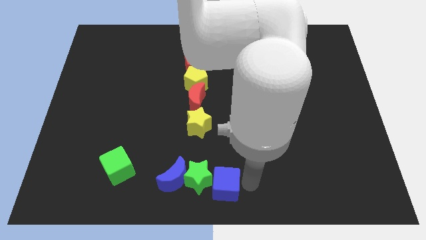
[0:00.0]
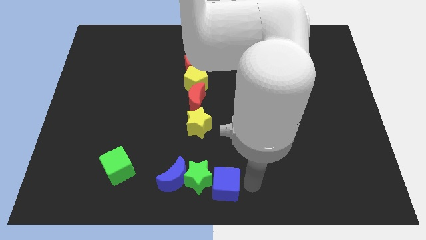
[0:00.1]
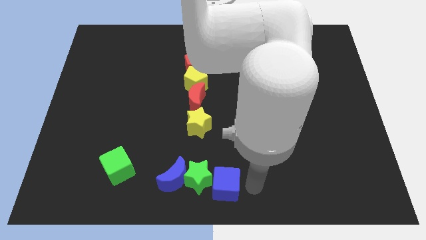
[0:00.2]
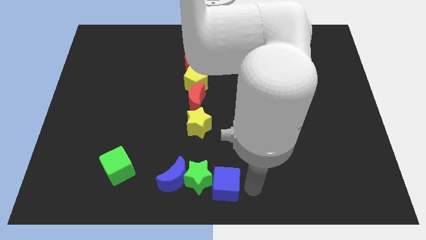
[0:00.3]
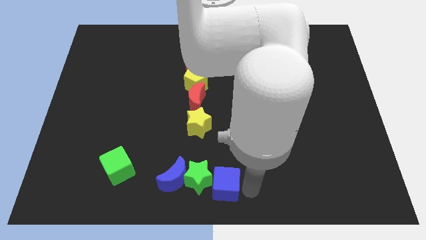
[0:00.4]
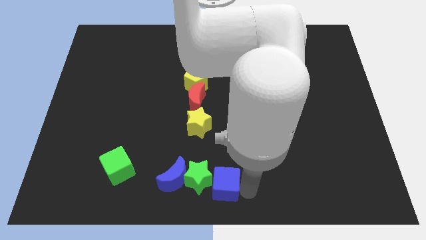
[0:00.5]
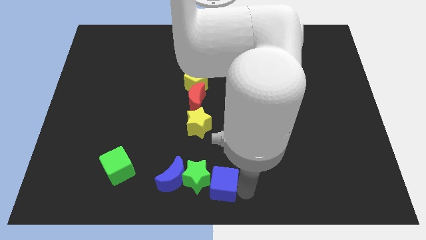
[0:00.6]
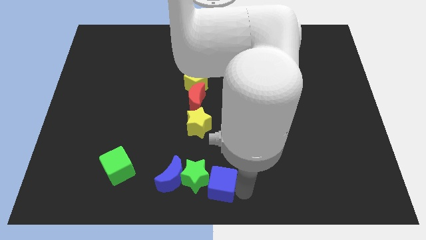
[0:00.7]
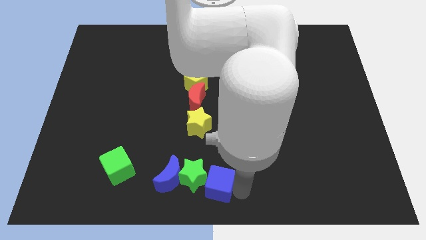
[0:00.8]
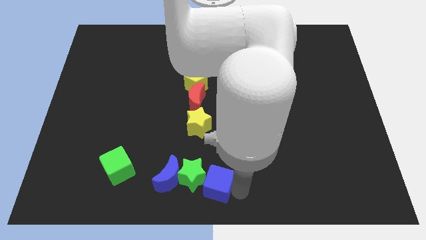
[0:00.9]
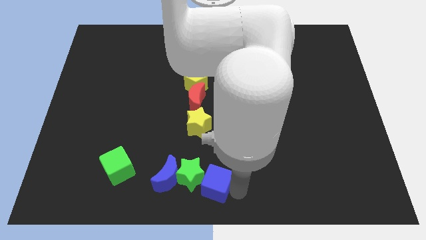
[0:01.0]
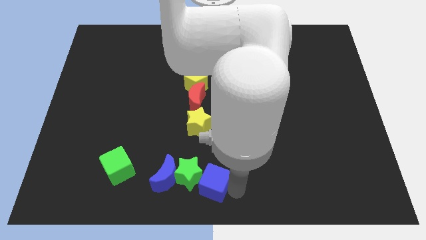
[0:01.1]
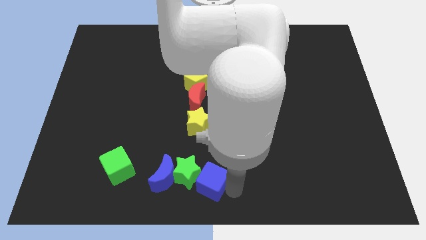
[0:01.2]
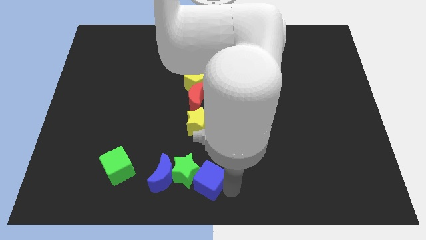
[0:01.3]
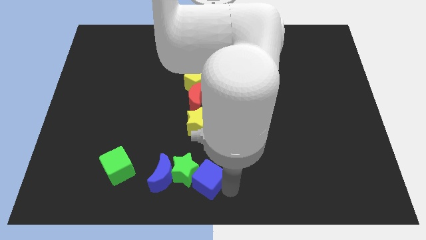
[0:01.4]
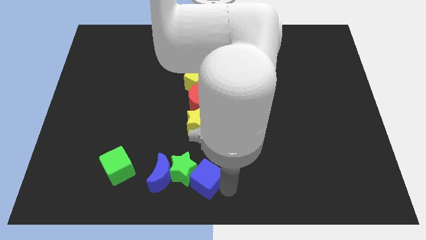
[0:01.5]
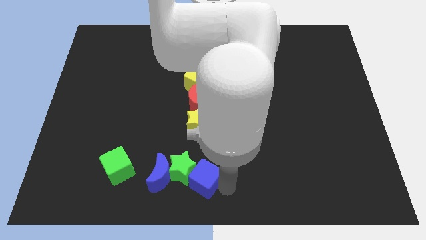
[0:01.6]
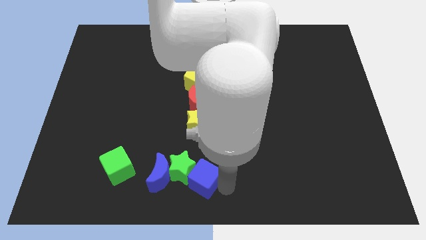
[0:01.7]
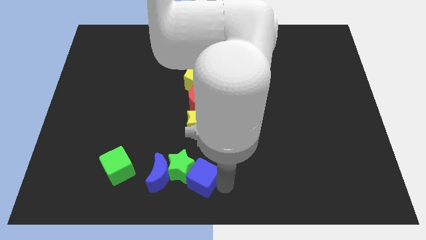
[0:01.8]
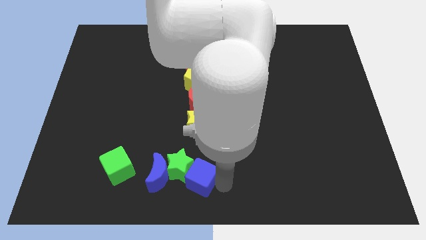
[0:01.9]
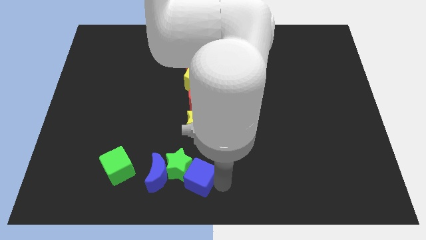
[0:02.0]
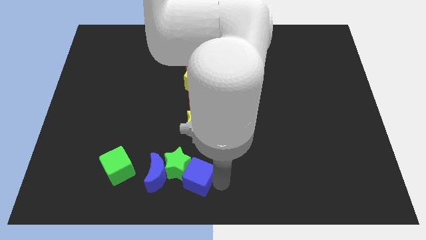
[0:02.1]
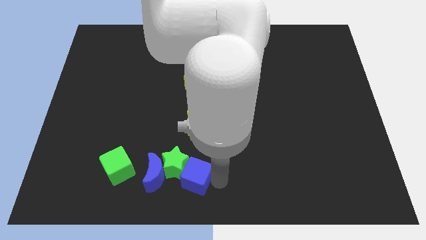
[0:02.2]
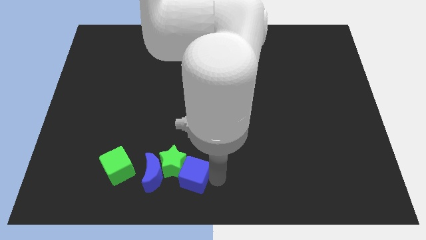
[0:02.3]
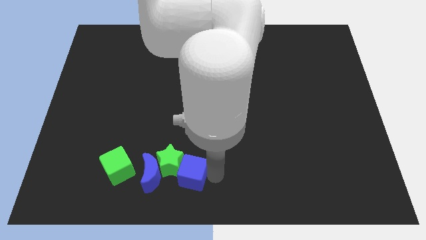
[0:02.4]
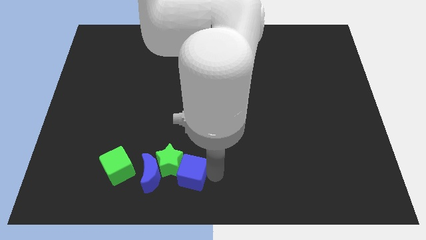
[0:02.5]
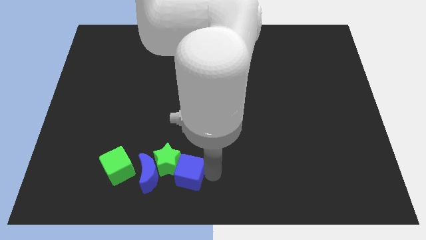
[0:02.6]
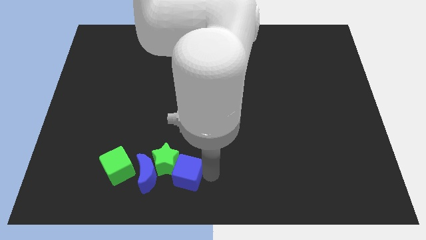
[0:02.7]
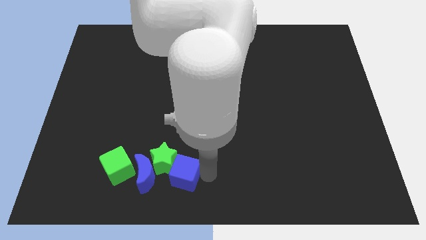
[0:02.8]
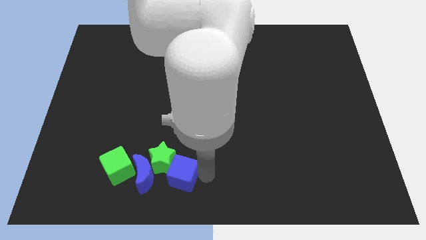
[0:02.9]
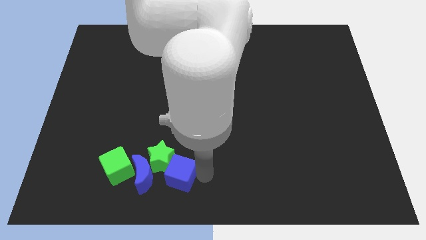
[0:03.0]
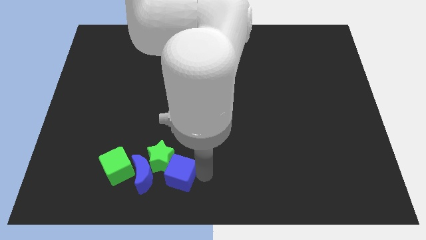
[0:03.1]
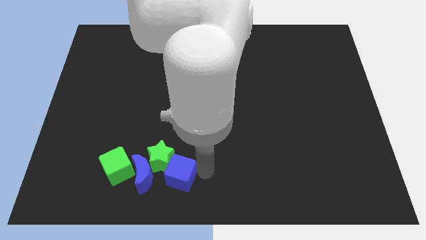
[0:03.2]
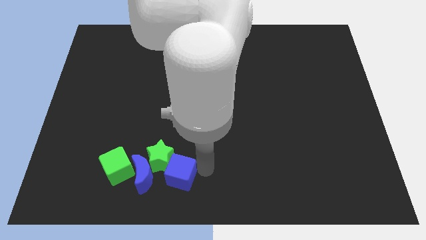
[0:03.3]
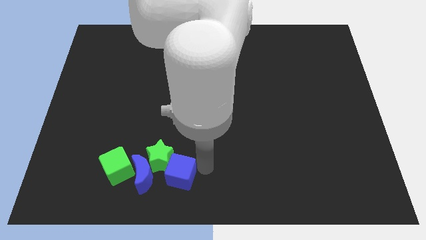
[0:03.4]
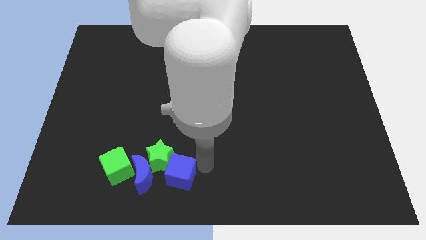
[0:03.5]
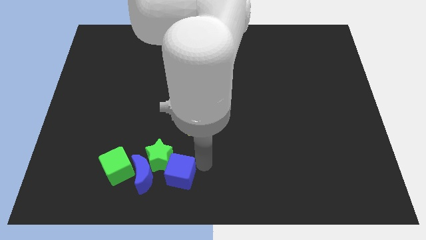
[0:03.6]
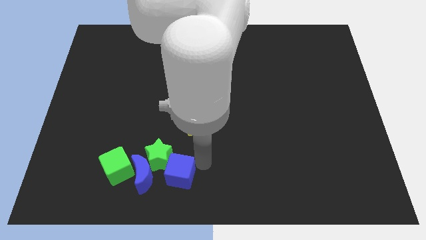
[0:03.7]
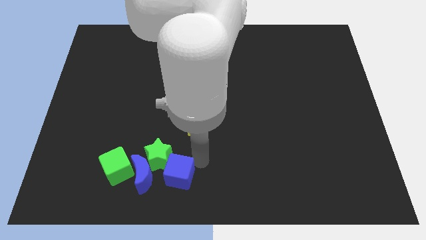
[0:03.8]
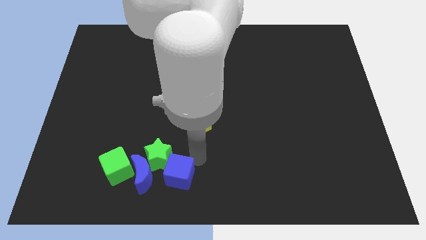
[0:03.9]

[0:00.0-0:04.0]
move the blue cube to form a row towards the green star

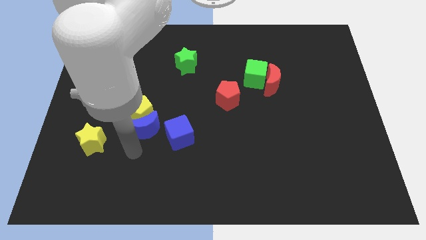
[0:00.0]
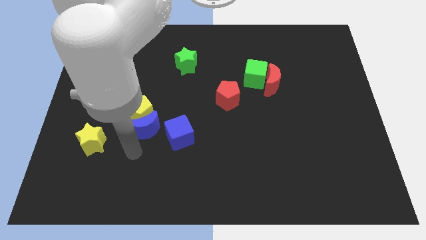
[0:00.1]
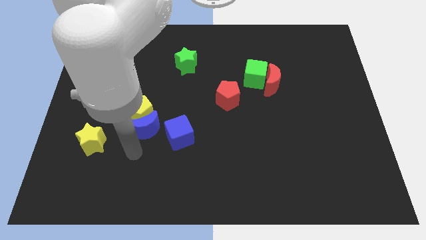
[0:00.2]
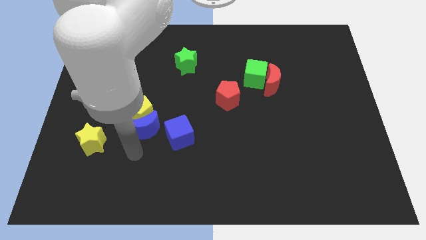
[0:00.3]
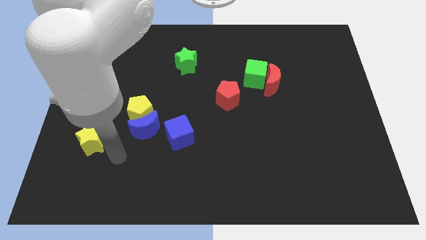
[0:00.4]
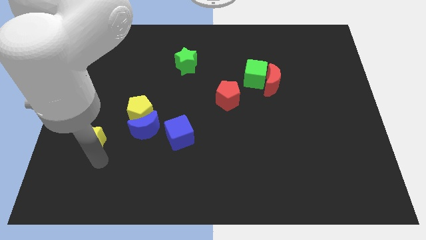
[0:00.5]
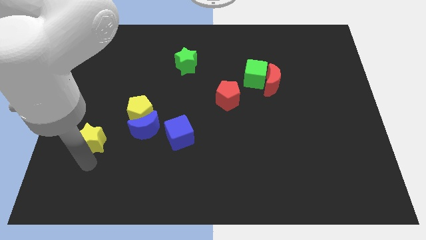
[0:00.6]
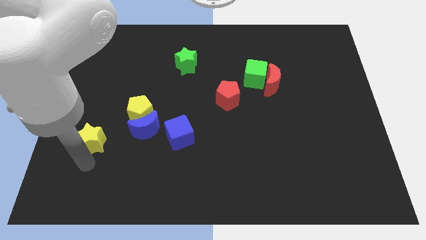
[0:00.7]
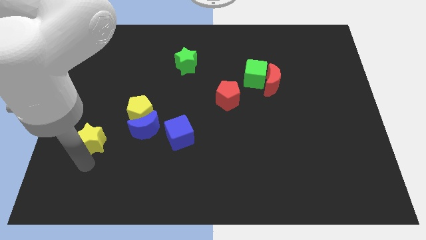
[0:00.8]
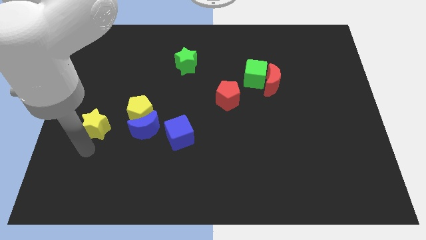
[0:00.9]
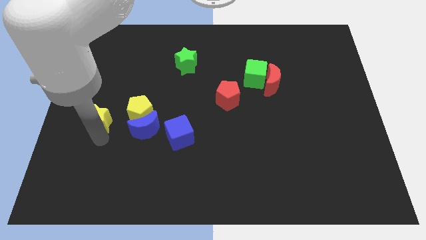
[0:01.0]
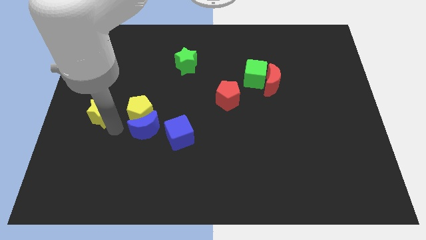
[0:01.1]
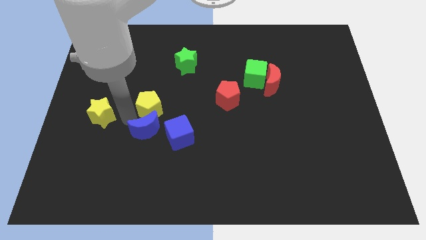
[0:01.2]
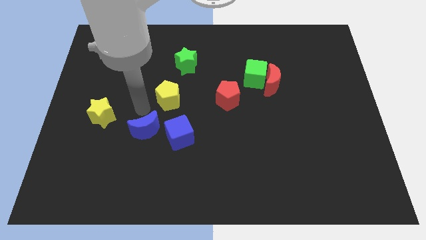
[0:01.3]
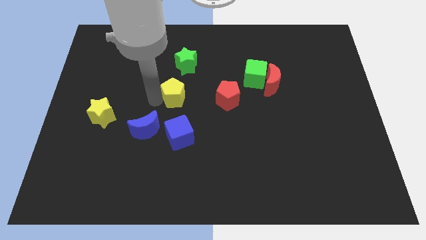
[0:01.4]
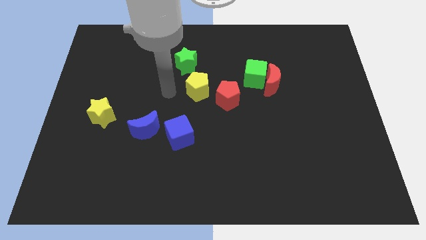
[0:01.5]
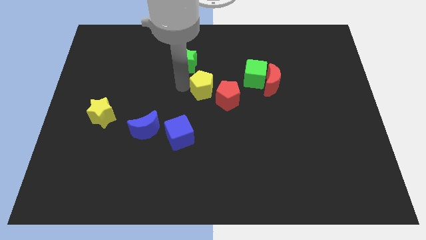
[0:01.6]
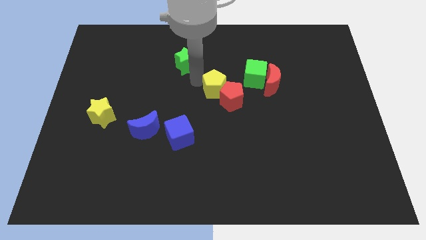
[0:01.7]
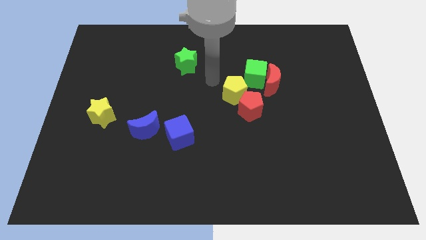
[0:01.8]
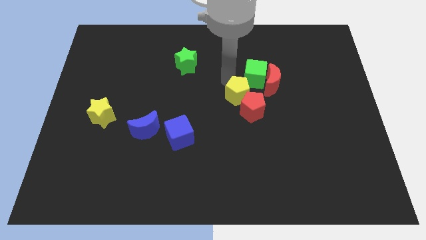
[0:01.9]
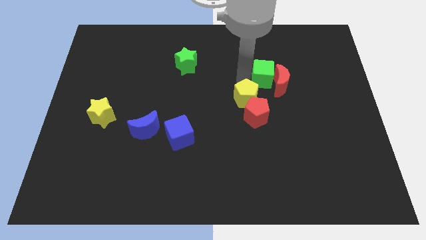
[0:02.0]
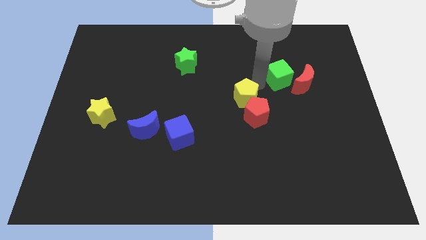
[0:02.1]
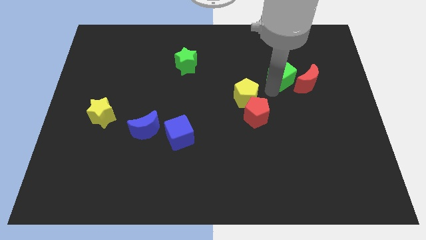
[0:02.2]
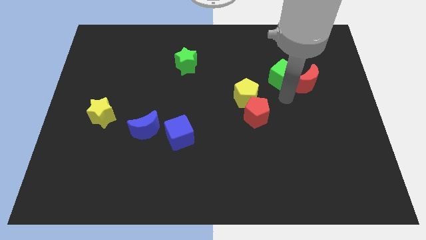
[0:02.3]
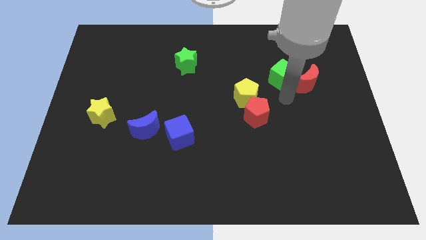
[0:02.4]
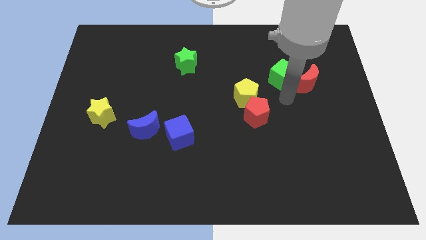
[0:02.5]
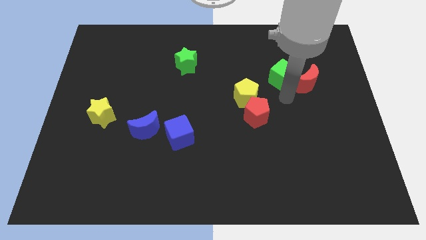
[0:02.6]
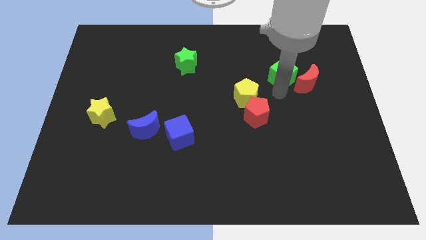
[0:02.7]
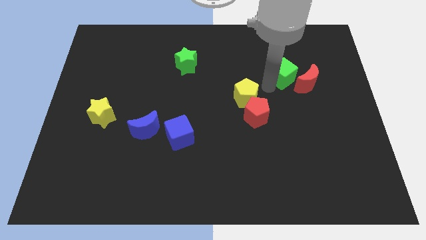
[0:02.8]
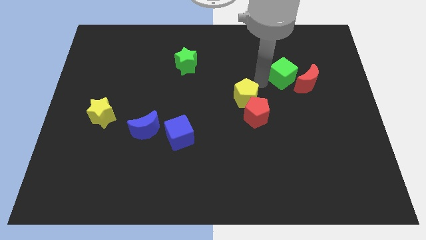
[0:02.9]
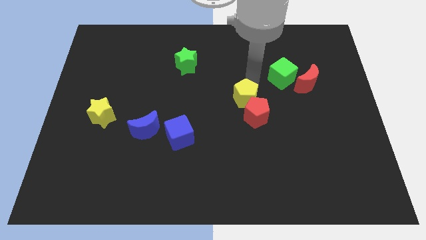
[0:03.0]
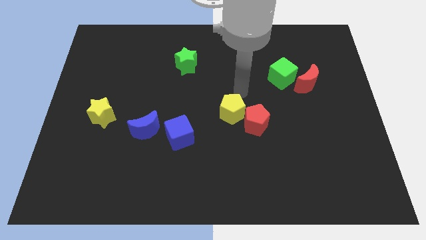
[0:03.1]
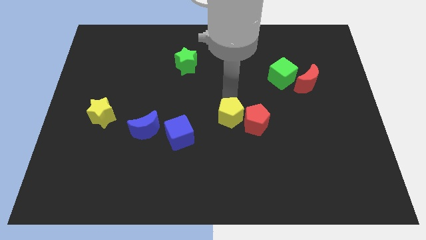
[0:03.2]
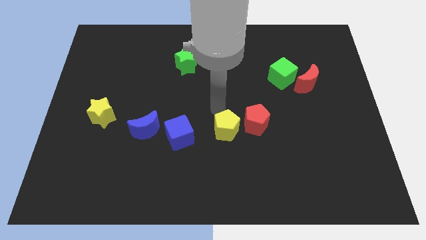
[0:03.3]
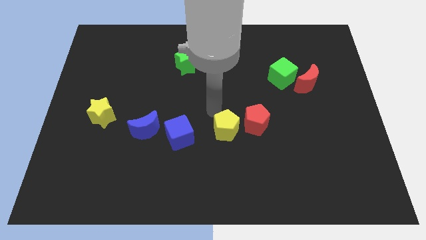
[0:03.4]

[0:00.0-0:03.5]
separate the yellow pentagon from blue cube

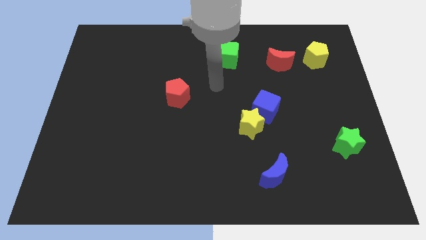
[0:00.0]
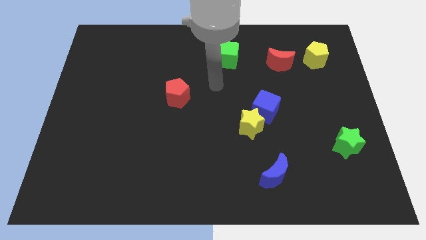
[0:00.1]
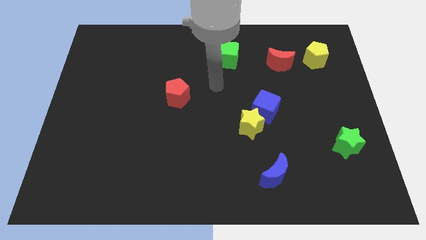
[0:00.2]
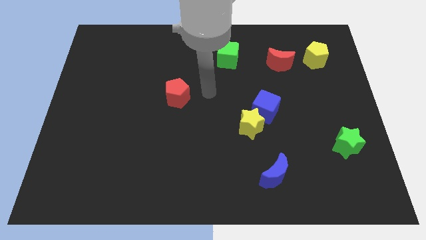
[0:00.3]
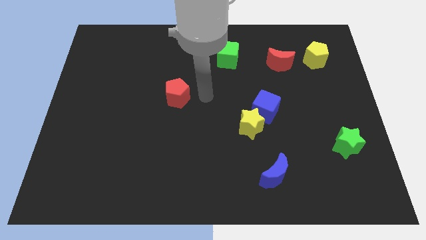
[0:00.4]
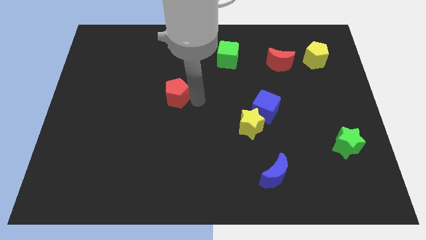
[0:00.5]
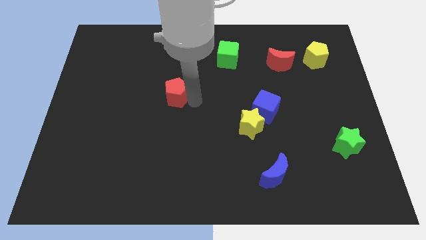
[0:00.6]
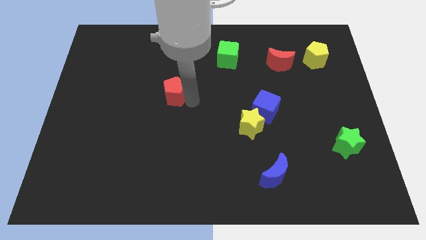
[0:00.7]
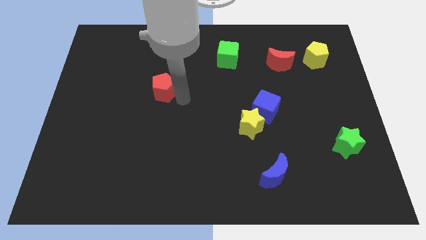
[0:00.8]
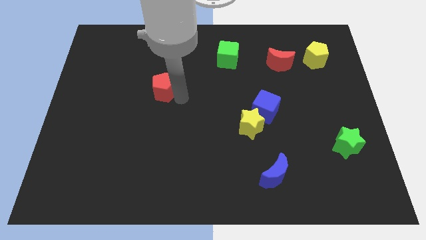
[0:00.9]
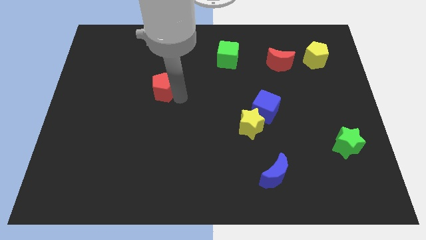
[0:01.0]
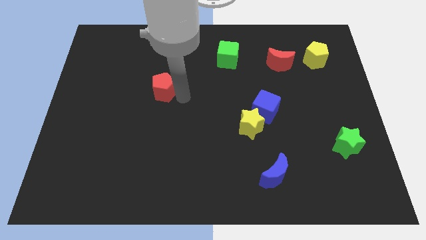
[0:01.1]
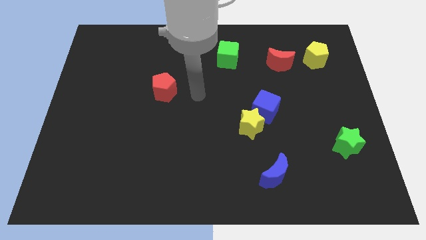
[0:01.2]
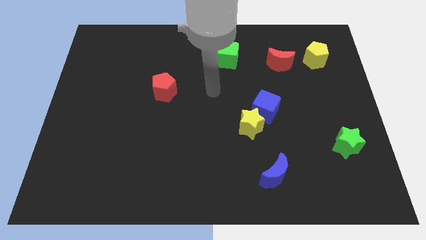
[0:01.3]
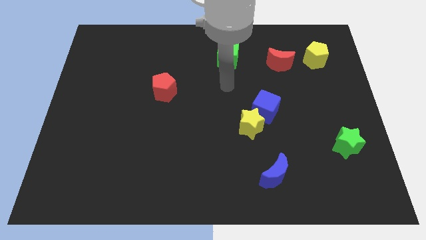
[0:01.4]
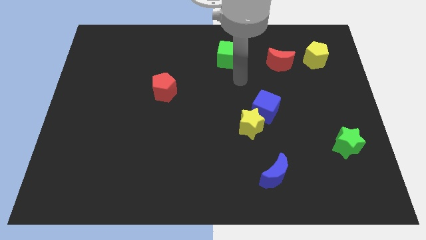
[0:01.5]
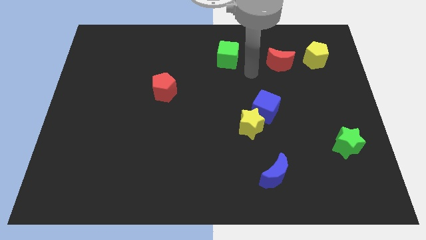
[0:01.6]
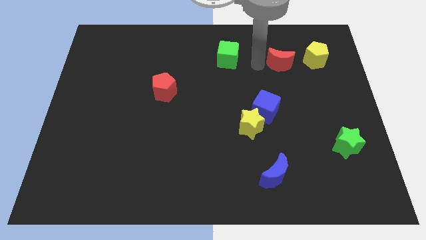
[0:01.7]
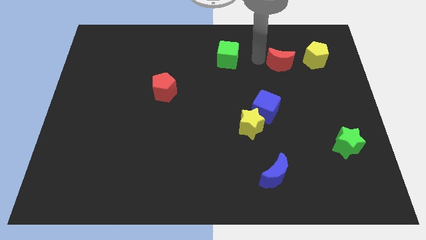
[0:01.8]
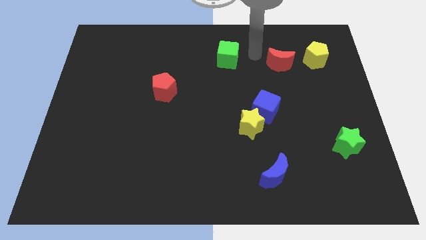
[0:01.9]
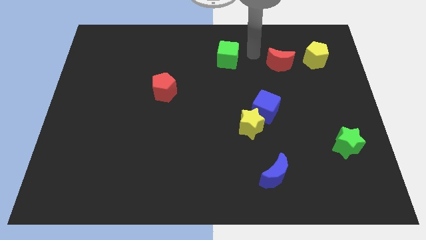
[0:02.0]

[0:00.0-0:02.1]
push the green cube and red pentagon close to each other
